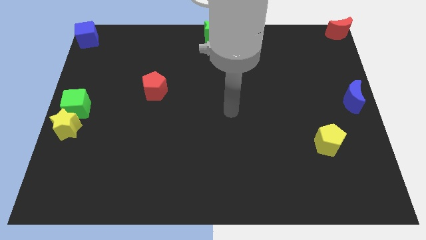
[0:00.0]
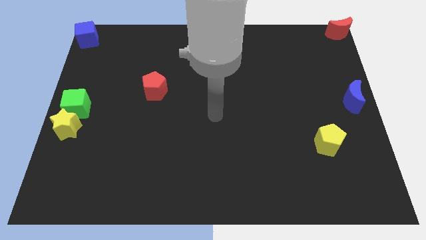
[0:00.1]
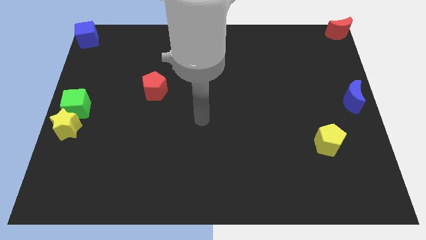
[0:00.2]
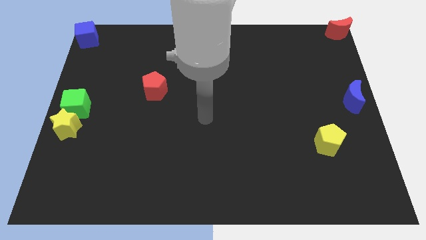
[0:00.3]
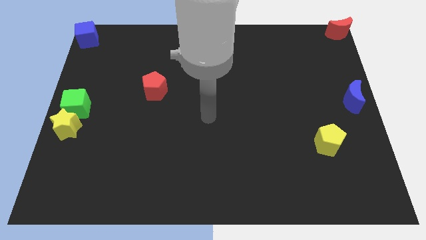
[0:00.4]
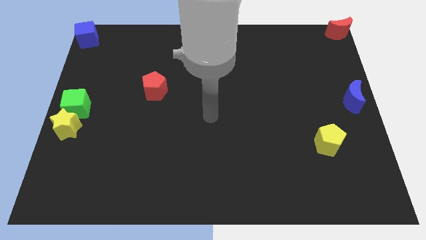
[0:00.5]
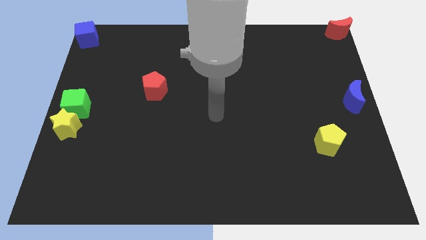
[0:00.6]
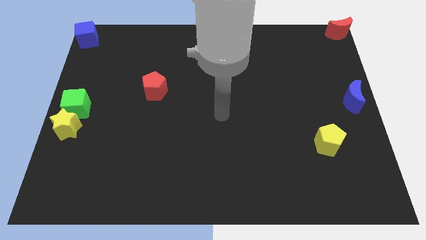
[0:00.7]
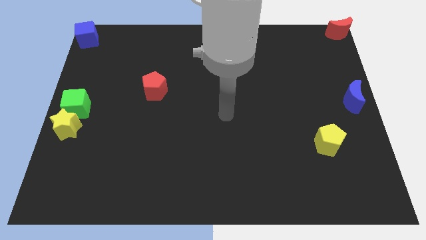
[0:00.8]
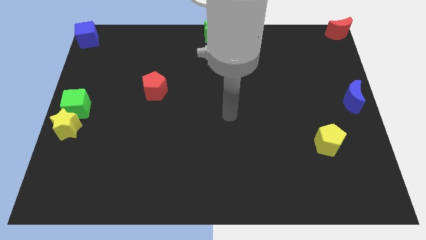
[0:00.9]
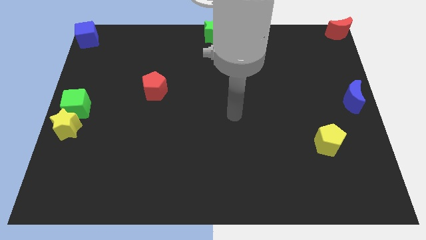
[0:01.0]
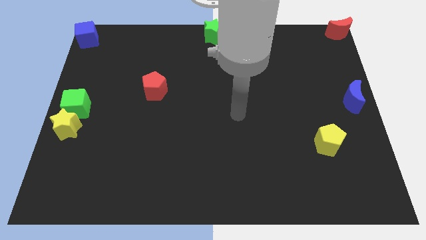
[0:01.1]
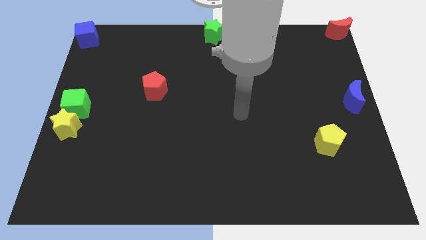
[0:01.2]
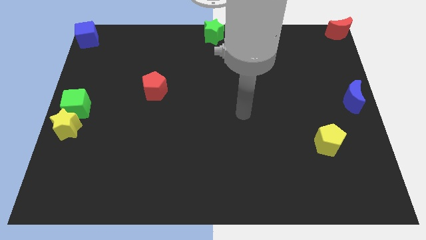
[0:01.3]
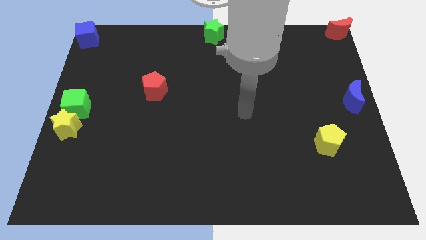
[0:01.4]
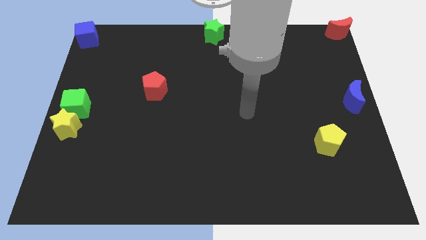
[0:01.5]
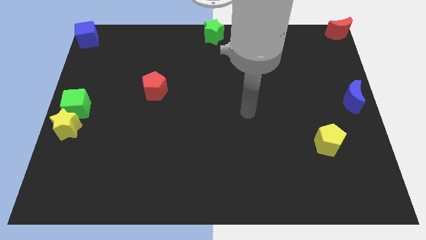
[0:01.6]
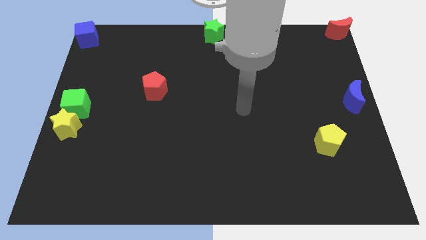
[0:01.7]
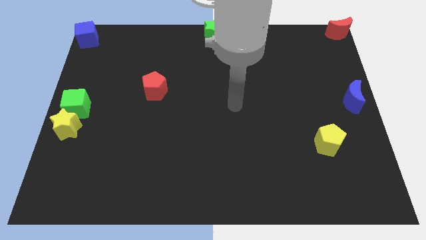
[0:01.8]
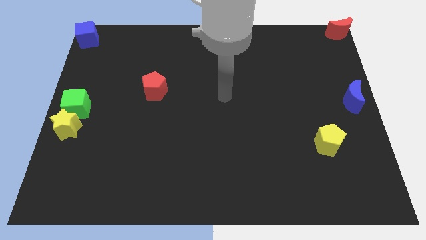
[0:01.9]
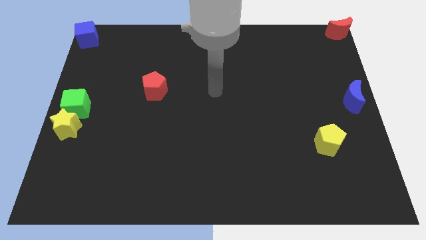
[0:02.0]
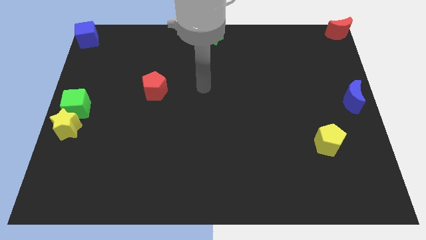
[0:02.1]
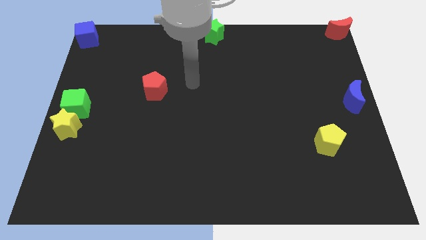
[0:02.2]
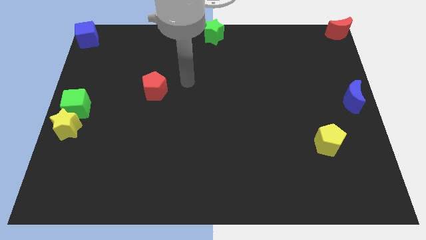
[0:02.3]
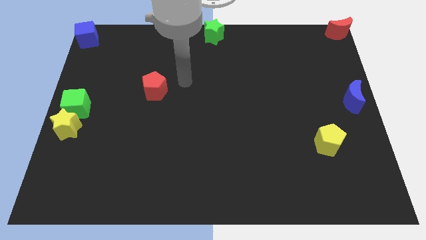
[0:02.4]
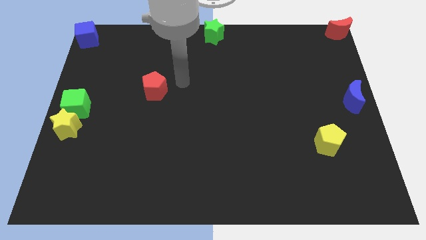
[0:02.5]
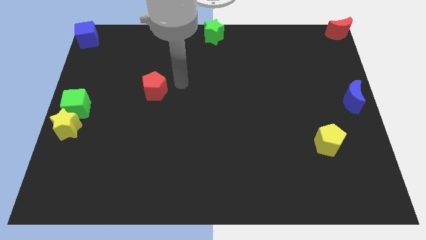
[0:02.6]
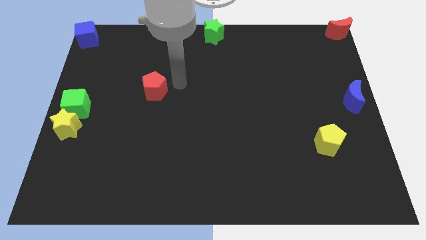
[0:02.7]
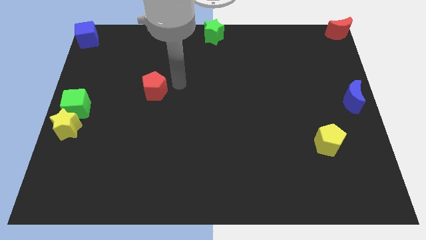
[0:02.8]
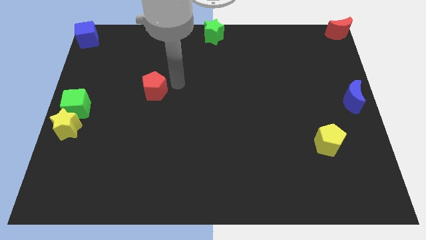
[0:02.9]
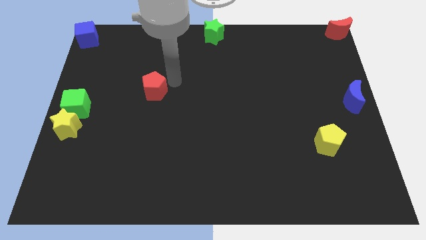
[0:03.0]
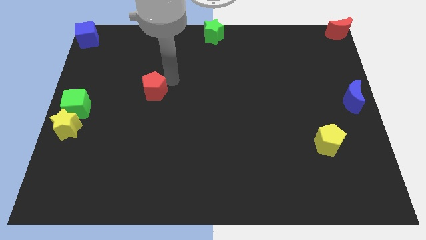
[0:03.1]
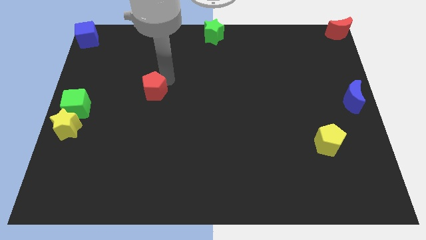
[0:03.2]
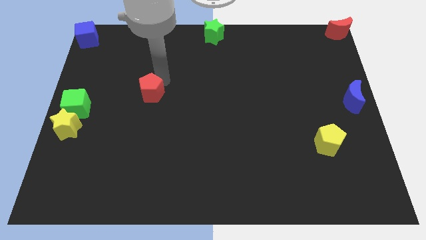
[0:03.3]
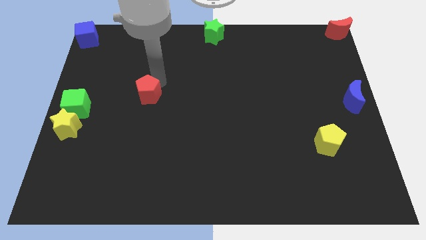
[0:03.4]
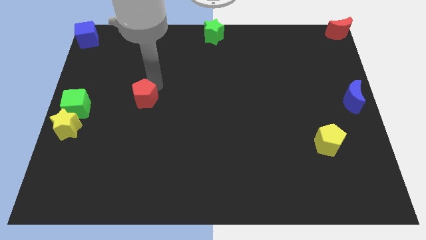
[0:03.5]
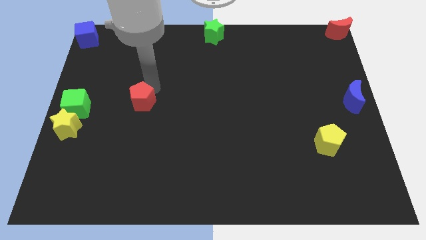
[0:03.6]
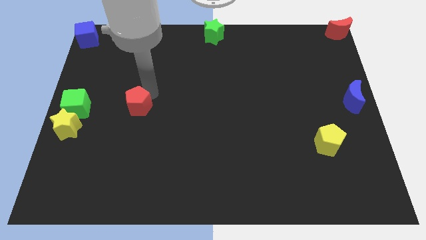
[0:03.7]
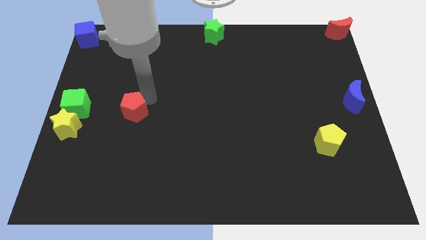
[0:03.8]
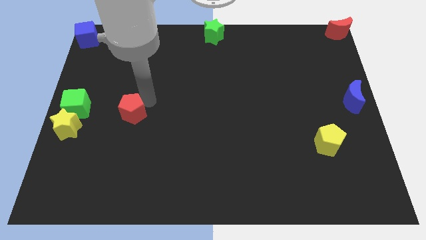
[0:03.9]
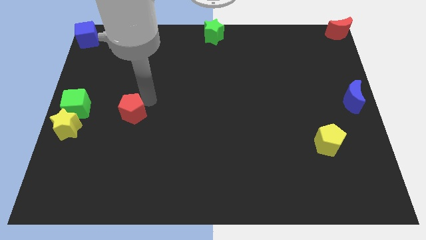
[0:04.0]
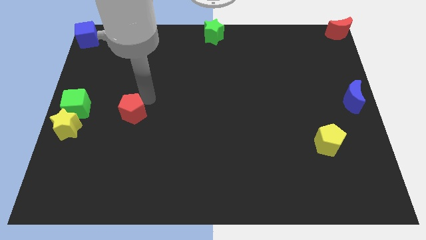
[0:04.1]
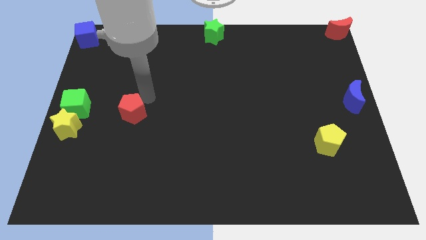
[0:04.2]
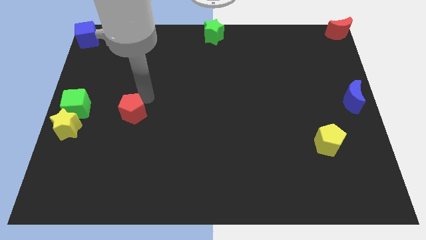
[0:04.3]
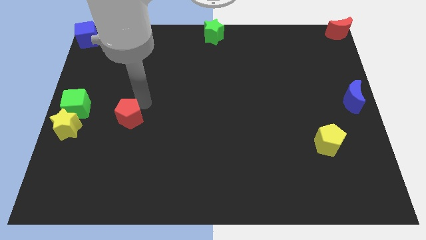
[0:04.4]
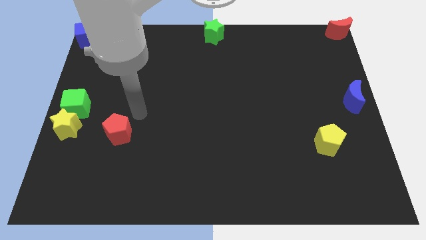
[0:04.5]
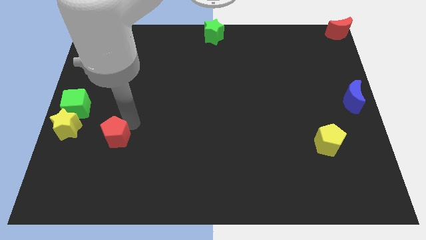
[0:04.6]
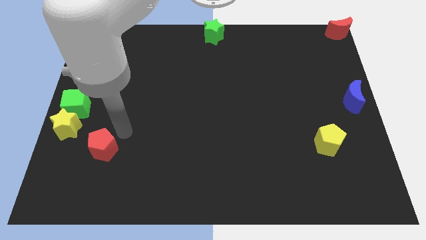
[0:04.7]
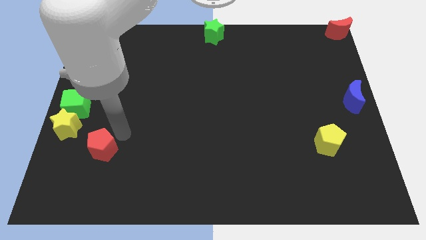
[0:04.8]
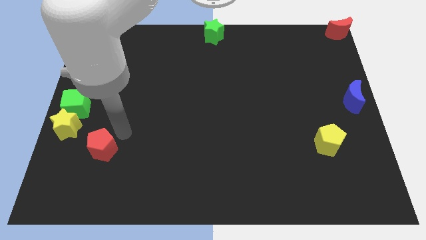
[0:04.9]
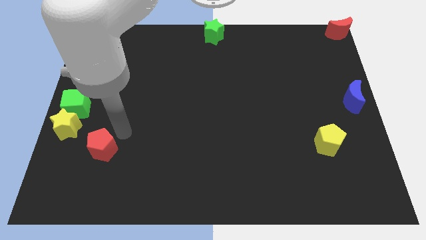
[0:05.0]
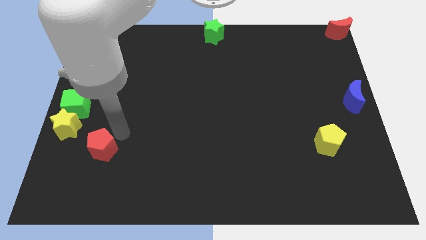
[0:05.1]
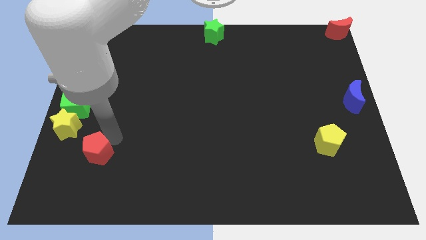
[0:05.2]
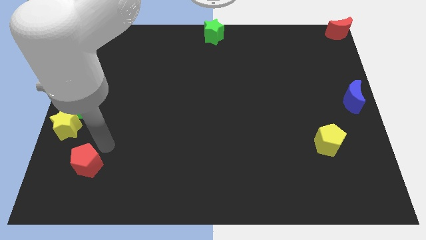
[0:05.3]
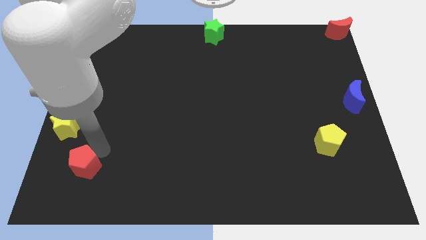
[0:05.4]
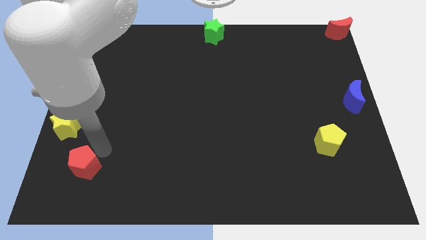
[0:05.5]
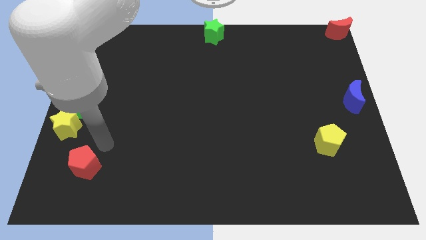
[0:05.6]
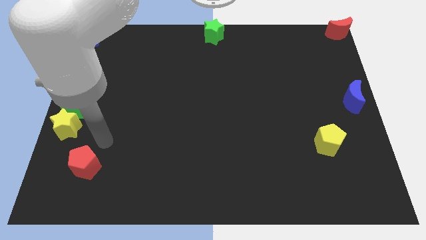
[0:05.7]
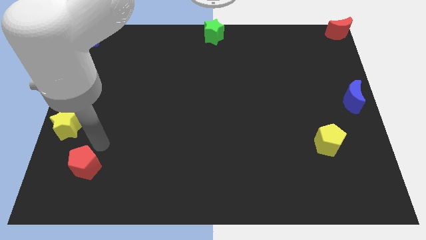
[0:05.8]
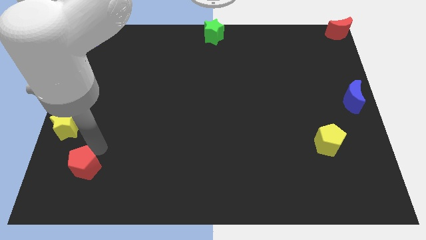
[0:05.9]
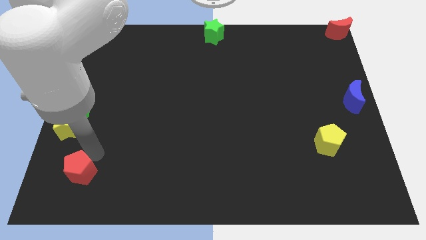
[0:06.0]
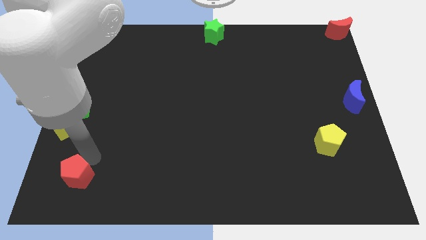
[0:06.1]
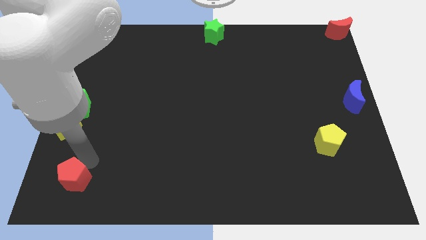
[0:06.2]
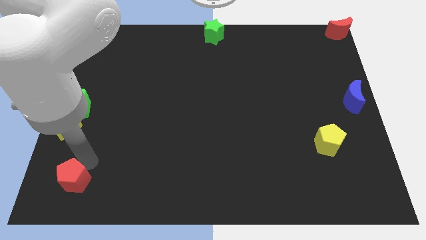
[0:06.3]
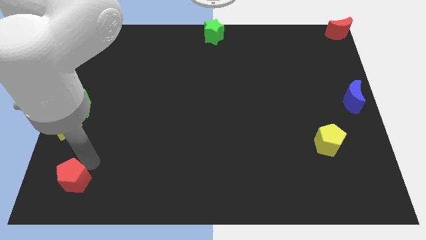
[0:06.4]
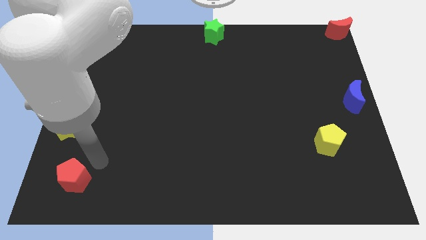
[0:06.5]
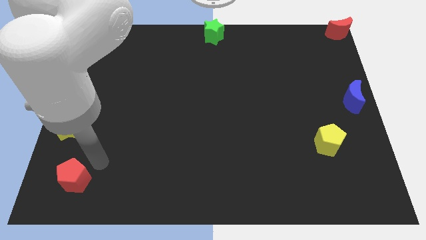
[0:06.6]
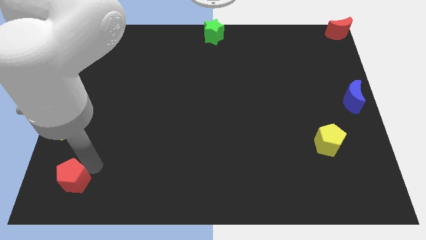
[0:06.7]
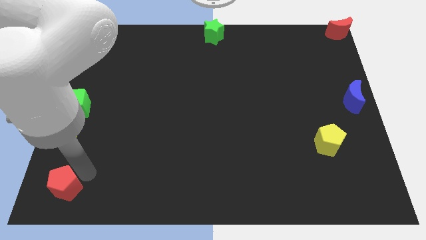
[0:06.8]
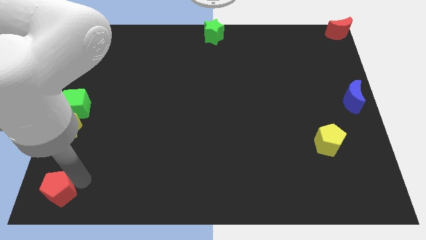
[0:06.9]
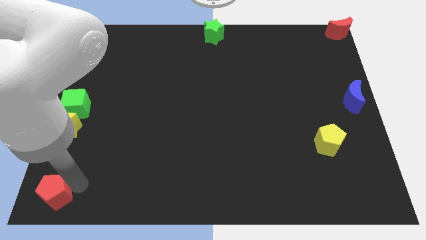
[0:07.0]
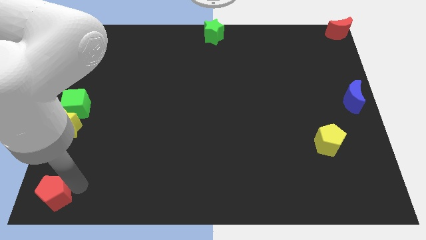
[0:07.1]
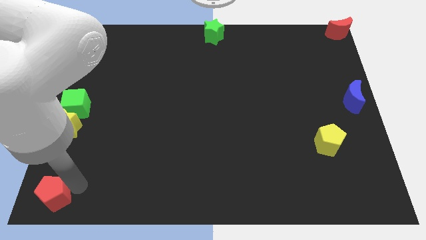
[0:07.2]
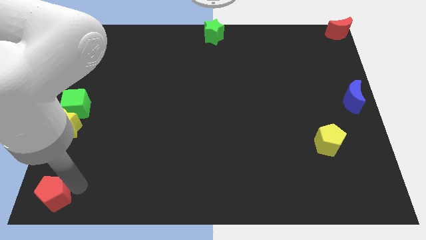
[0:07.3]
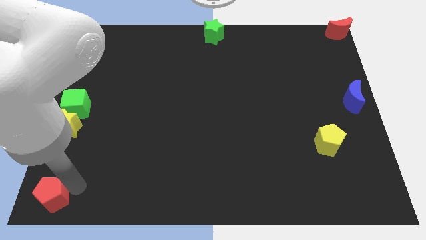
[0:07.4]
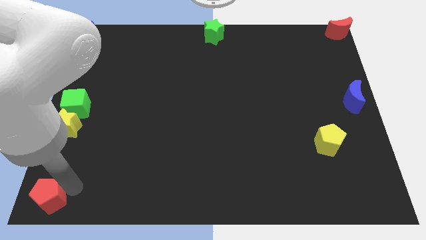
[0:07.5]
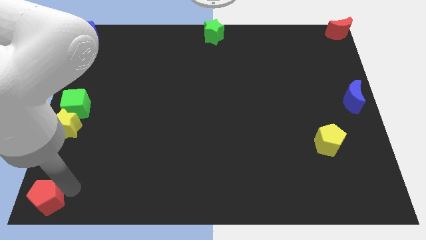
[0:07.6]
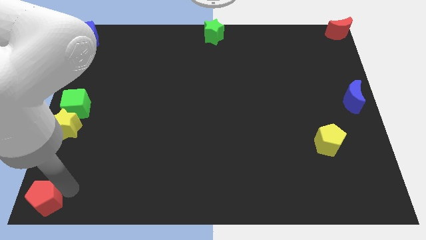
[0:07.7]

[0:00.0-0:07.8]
push red pentagon towards bottom left corner of the board

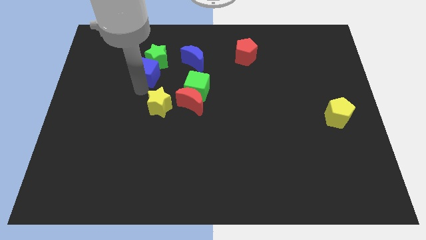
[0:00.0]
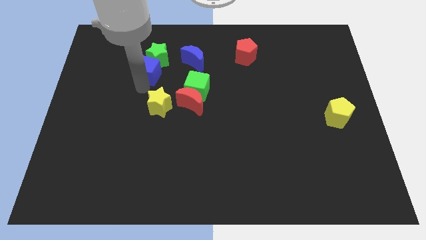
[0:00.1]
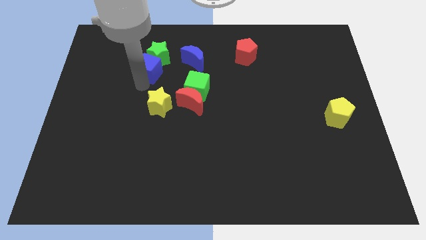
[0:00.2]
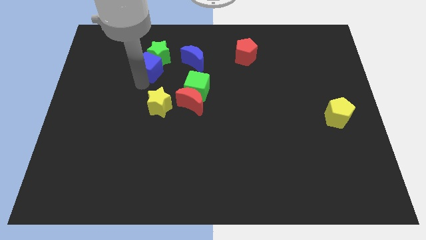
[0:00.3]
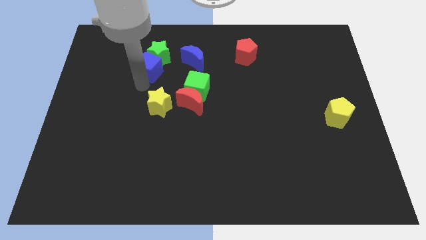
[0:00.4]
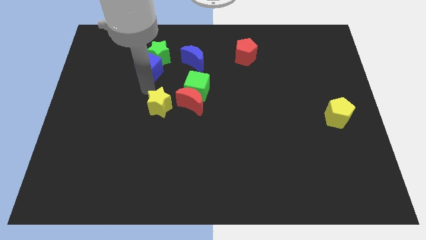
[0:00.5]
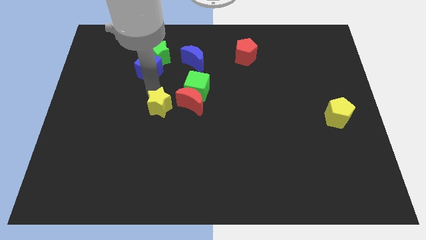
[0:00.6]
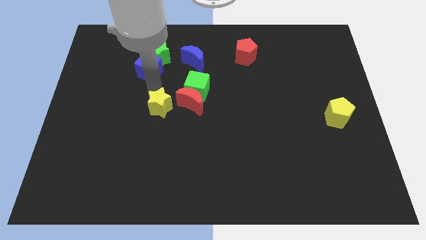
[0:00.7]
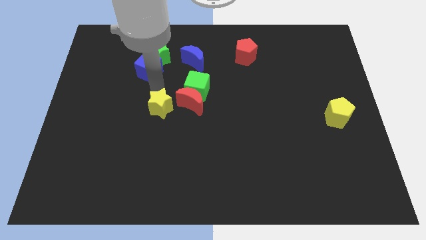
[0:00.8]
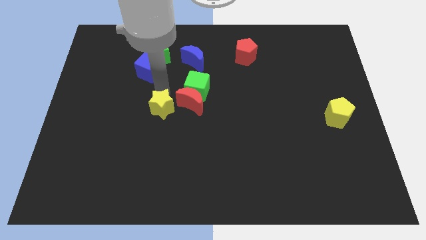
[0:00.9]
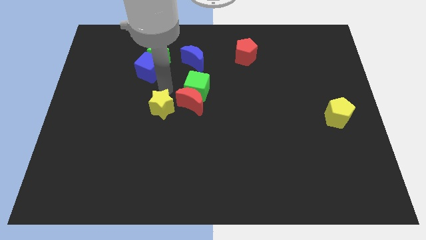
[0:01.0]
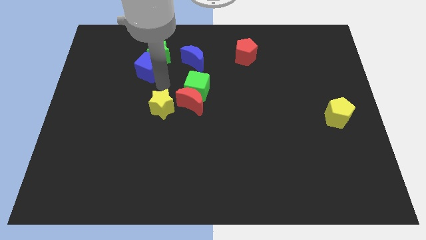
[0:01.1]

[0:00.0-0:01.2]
push blue block along with green star to the top of board
